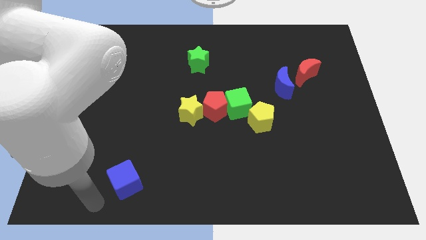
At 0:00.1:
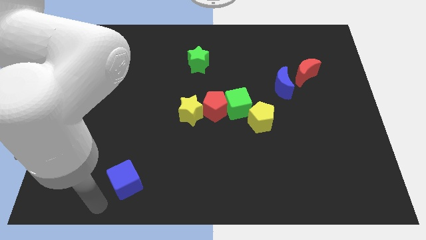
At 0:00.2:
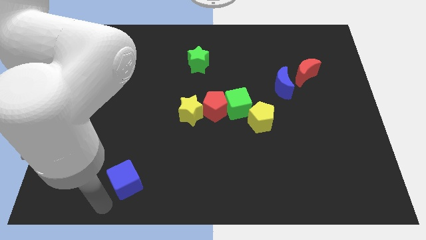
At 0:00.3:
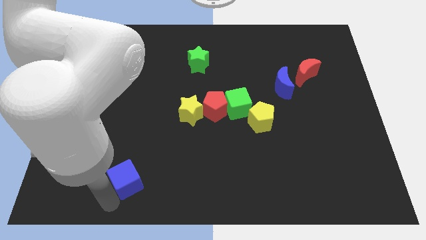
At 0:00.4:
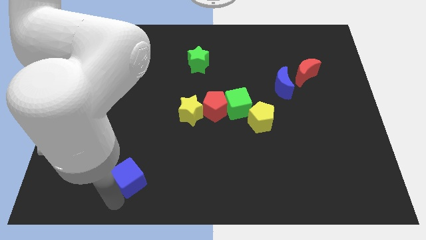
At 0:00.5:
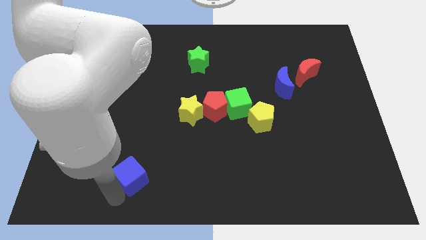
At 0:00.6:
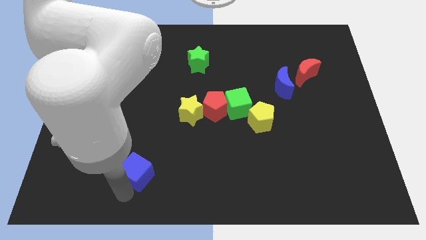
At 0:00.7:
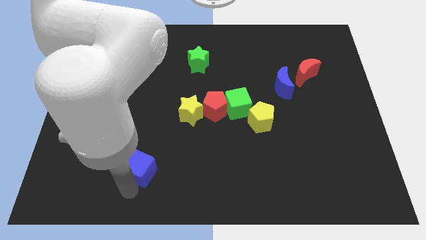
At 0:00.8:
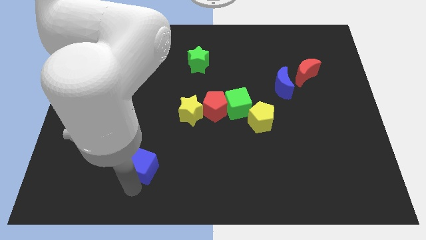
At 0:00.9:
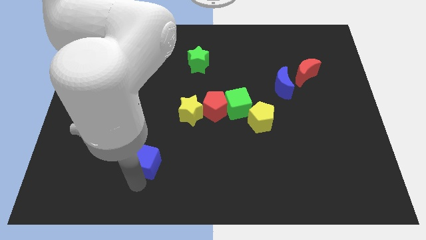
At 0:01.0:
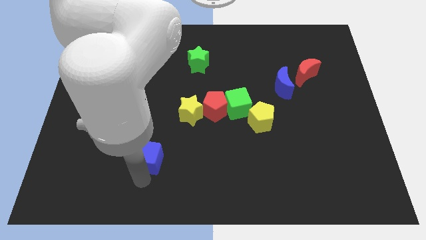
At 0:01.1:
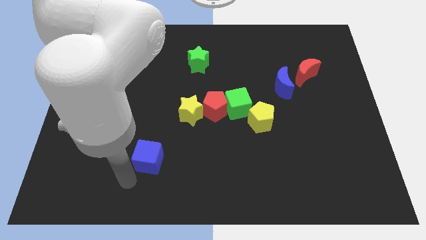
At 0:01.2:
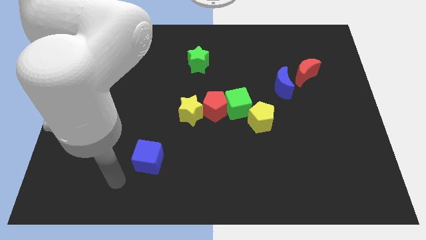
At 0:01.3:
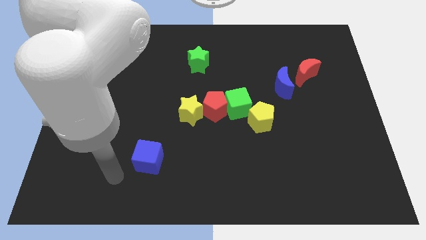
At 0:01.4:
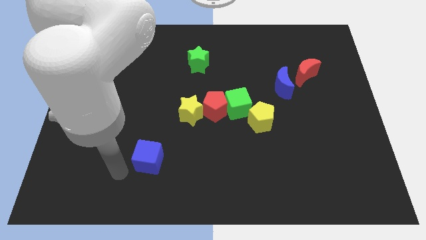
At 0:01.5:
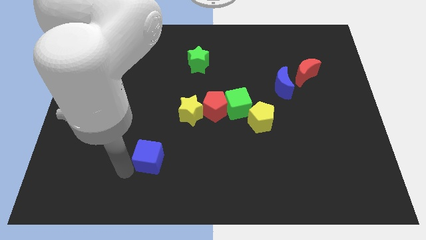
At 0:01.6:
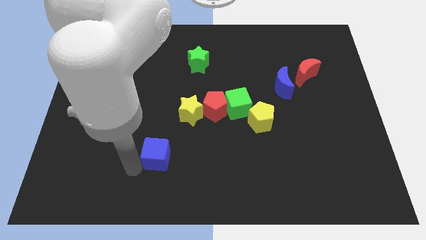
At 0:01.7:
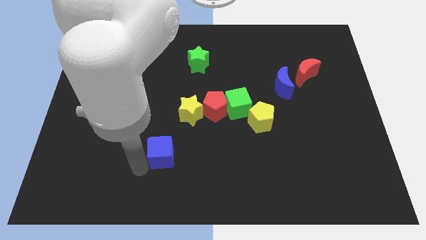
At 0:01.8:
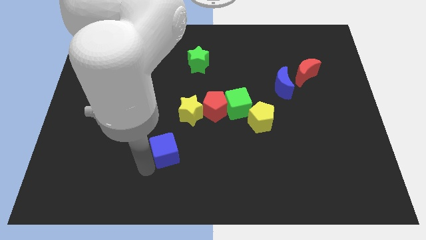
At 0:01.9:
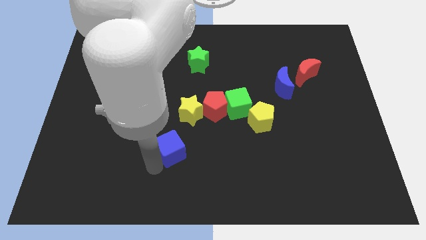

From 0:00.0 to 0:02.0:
push the blue cube towards the yellow star

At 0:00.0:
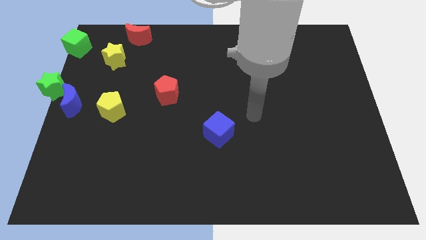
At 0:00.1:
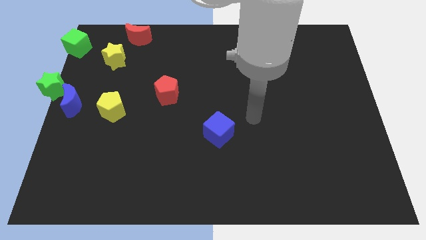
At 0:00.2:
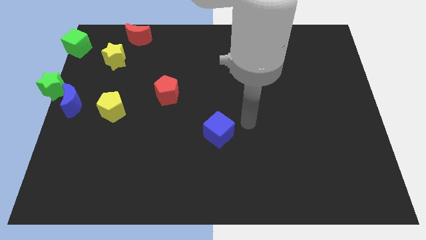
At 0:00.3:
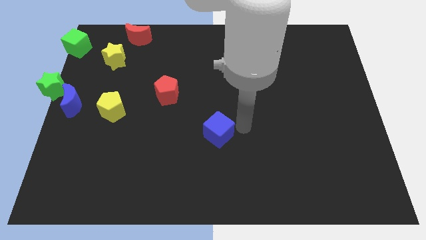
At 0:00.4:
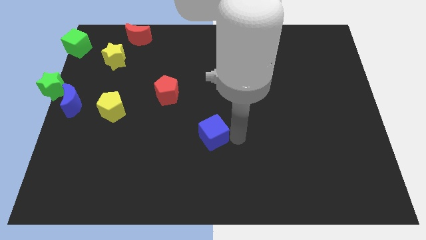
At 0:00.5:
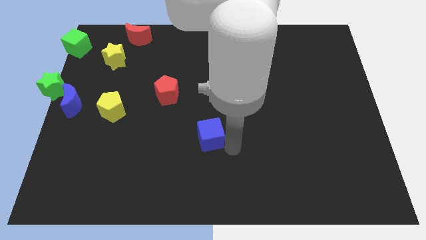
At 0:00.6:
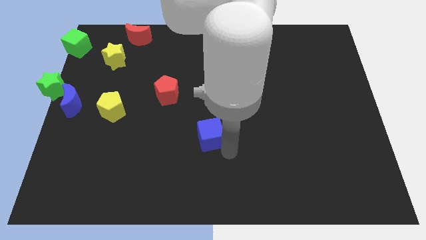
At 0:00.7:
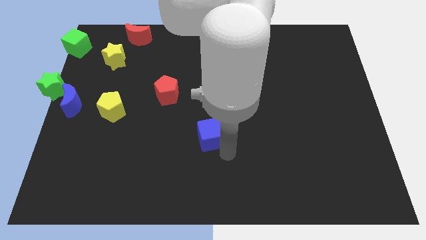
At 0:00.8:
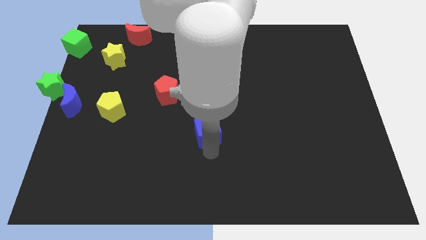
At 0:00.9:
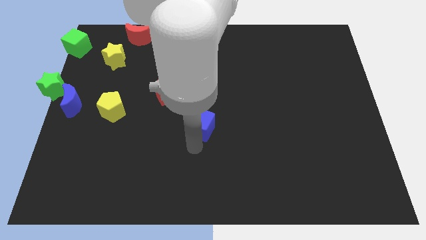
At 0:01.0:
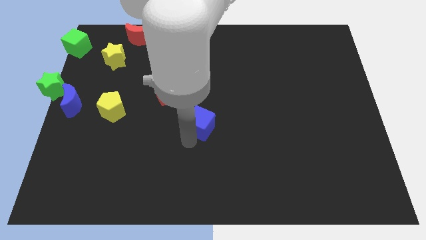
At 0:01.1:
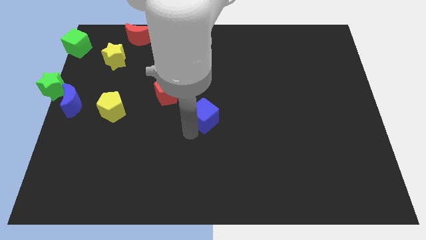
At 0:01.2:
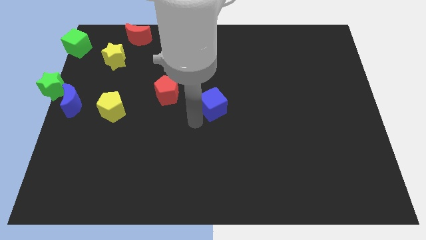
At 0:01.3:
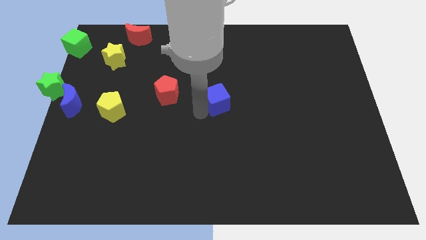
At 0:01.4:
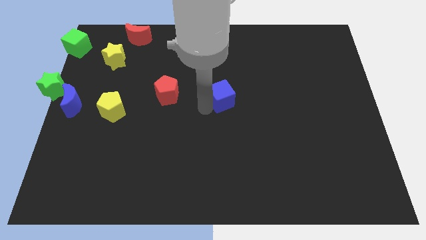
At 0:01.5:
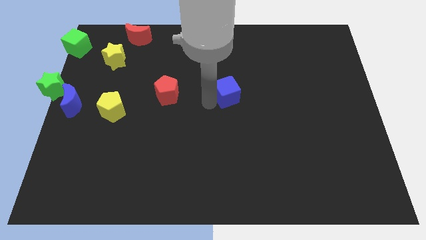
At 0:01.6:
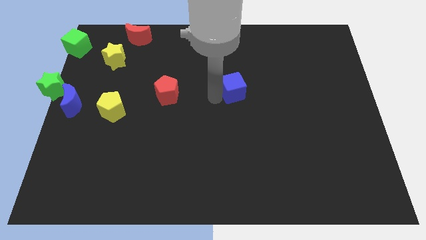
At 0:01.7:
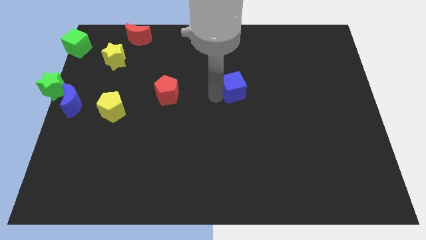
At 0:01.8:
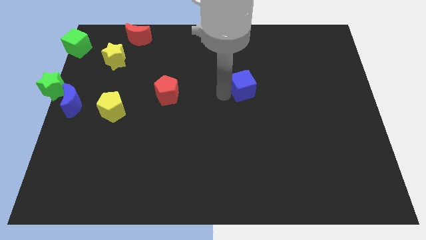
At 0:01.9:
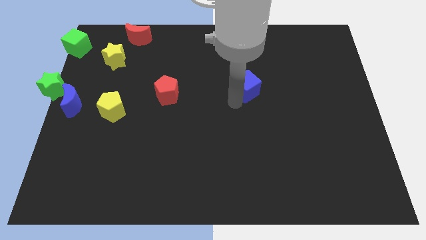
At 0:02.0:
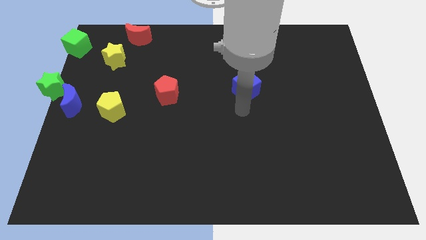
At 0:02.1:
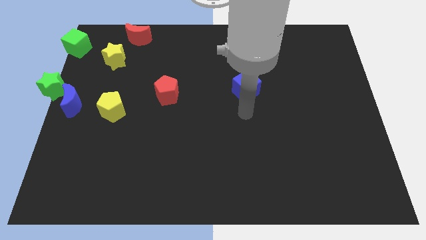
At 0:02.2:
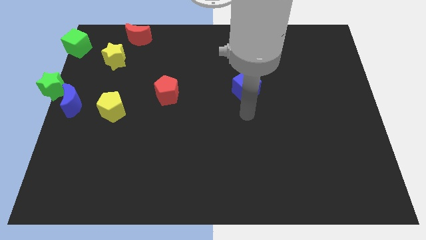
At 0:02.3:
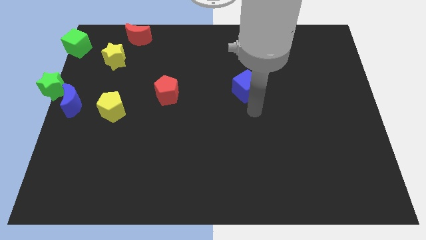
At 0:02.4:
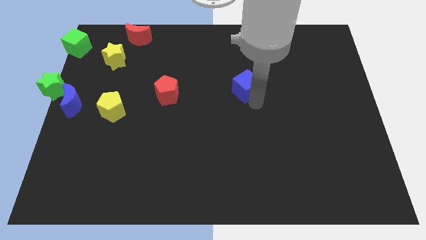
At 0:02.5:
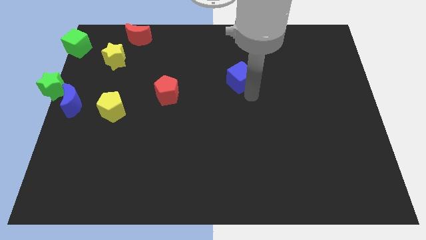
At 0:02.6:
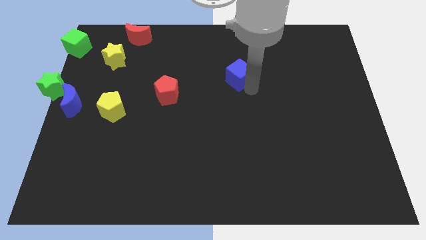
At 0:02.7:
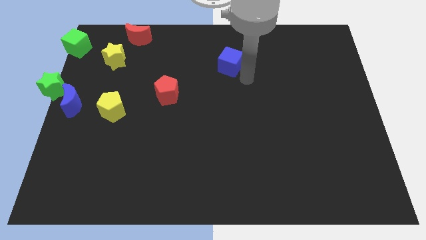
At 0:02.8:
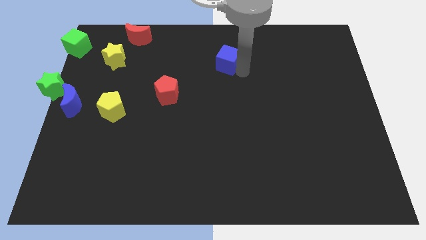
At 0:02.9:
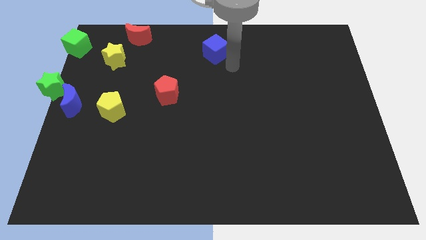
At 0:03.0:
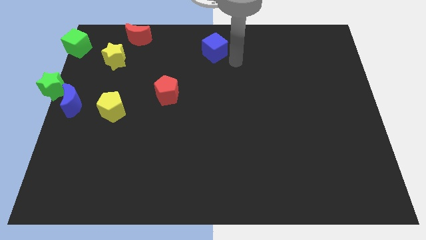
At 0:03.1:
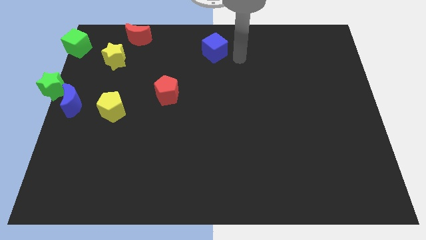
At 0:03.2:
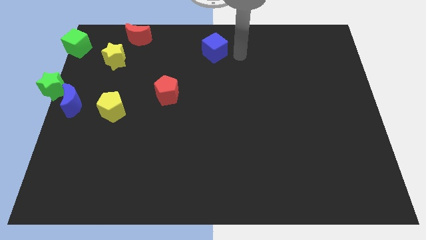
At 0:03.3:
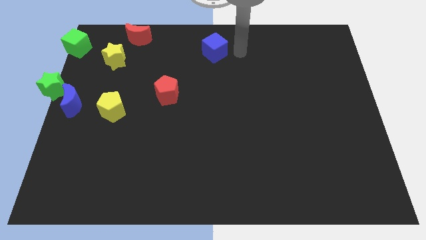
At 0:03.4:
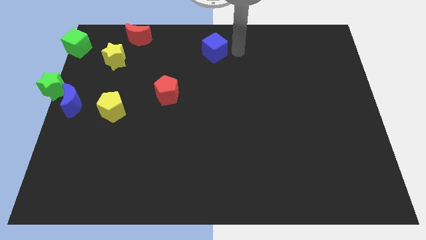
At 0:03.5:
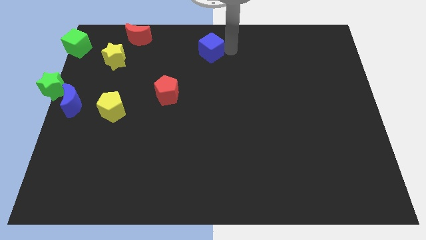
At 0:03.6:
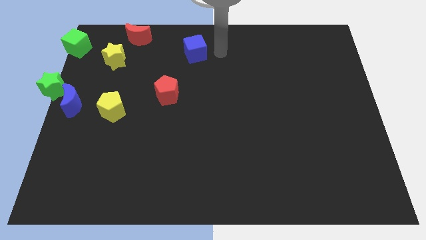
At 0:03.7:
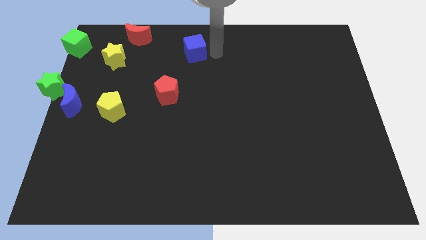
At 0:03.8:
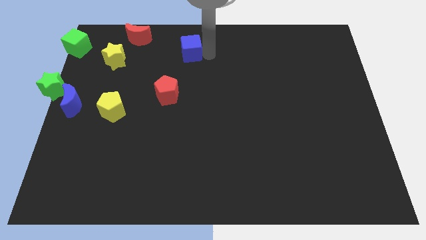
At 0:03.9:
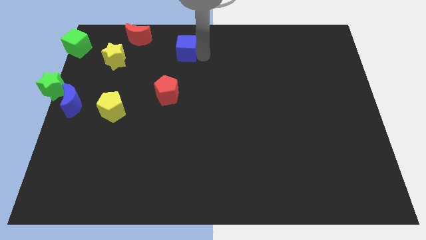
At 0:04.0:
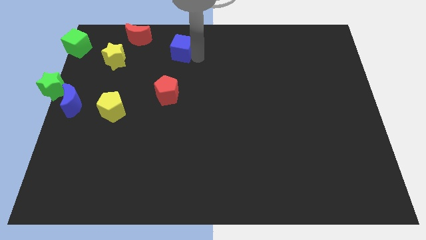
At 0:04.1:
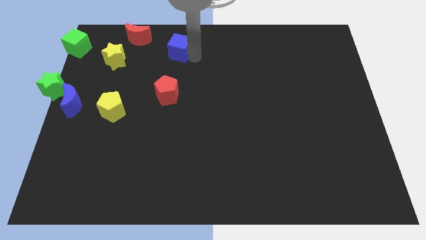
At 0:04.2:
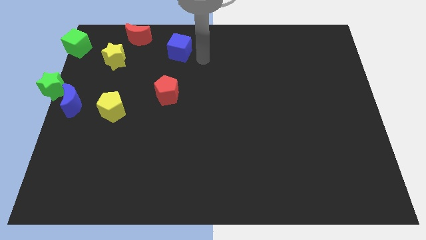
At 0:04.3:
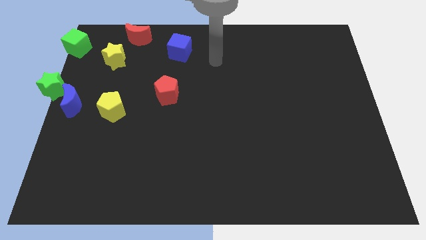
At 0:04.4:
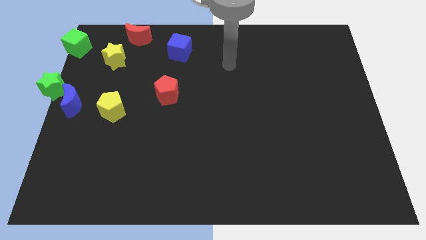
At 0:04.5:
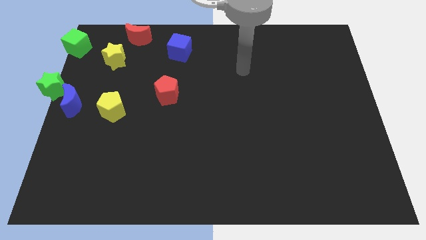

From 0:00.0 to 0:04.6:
move blue cube slightly above the red pentagon

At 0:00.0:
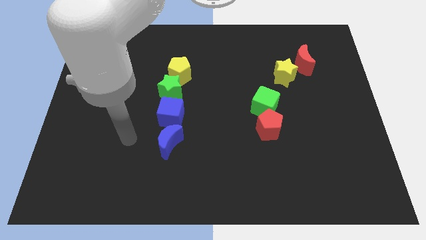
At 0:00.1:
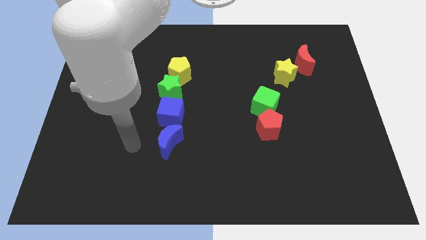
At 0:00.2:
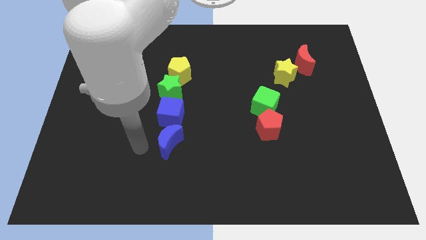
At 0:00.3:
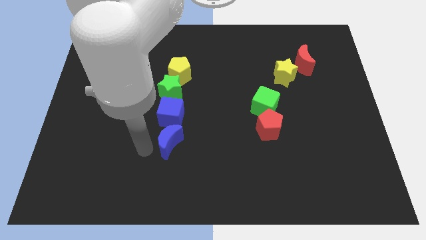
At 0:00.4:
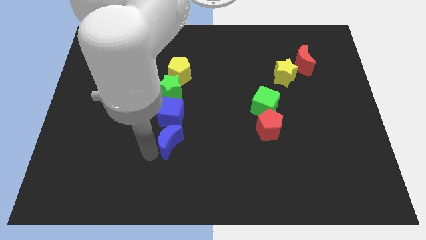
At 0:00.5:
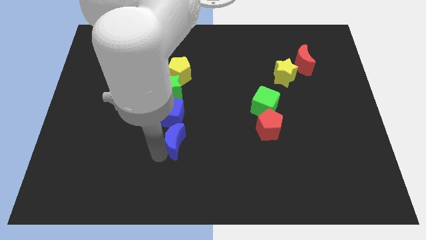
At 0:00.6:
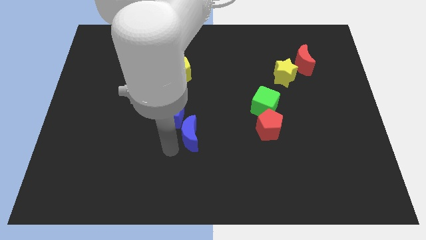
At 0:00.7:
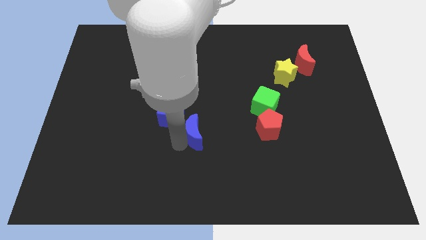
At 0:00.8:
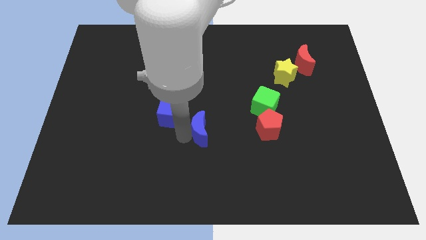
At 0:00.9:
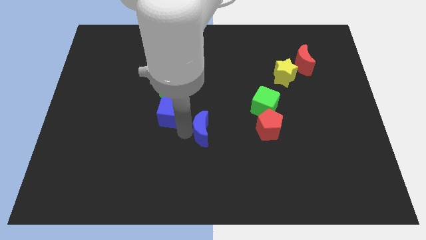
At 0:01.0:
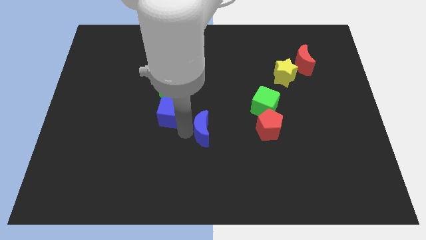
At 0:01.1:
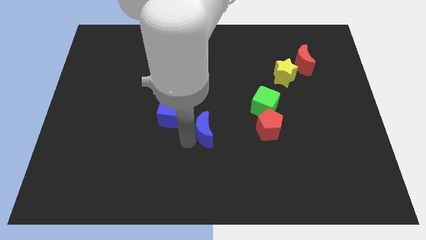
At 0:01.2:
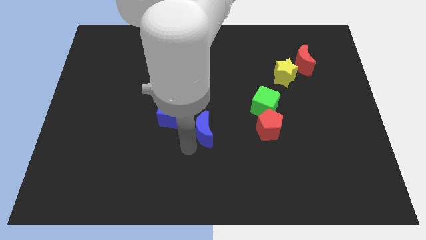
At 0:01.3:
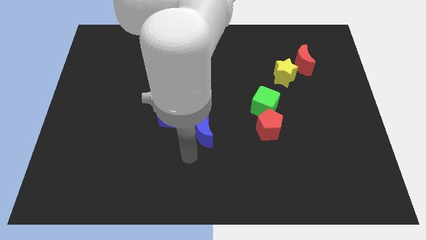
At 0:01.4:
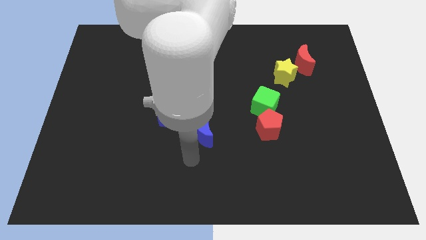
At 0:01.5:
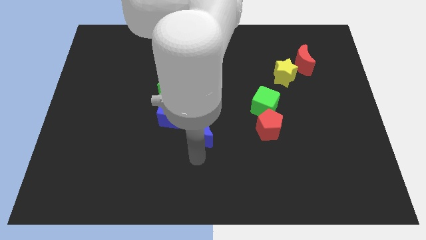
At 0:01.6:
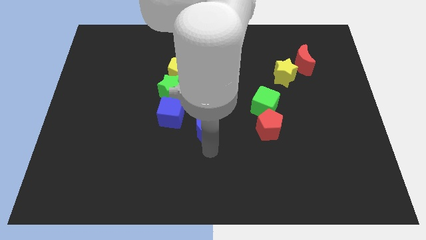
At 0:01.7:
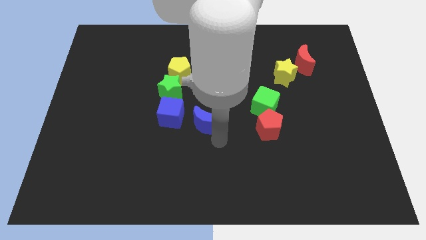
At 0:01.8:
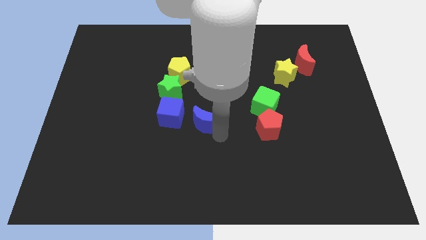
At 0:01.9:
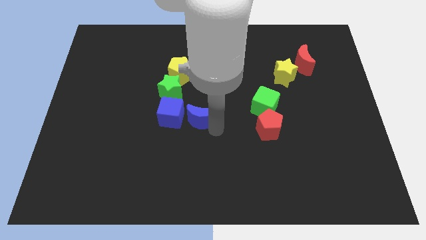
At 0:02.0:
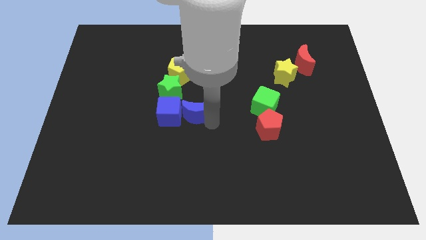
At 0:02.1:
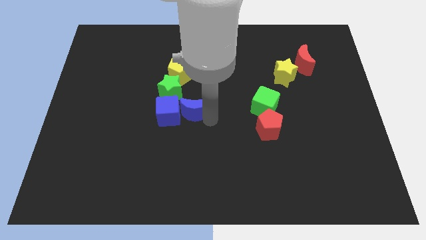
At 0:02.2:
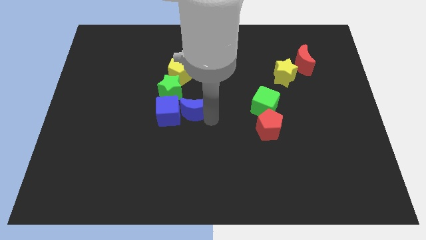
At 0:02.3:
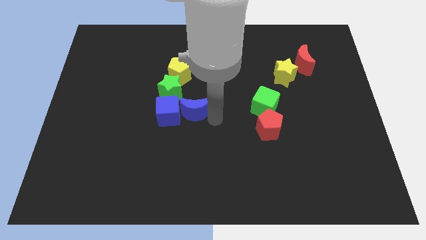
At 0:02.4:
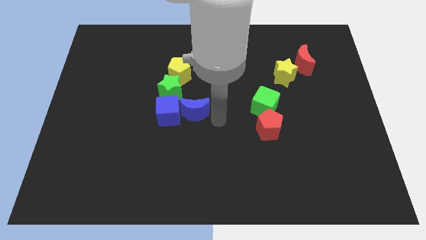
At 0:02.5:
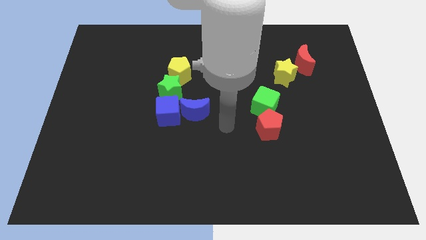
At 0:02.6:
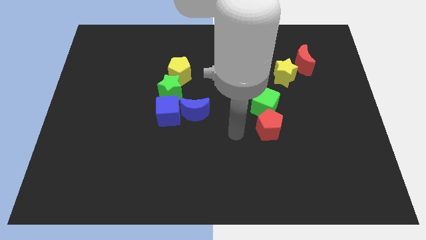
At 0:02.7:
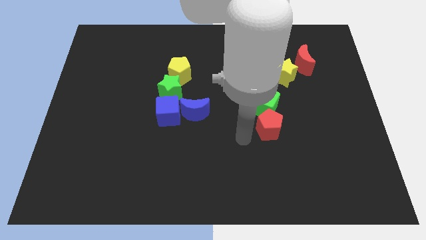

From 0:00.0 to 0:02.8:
place the blue crescent to the right of the blue cube
